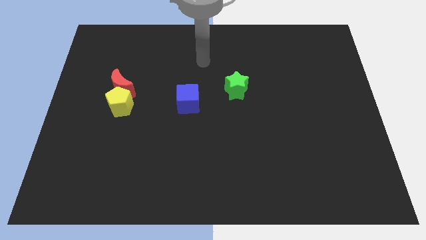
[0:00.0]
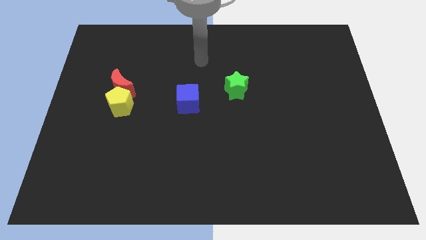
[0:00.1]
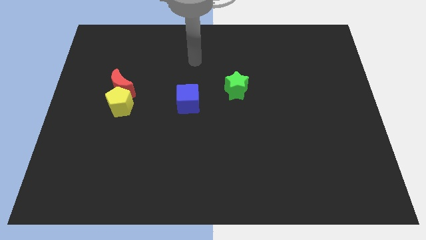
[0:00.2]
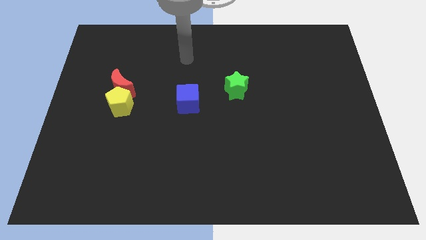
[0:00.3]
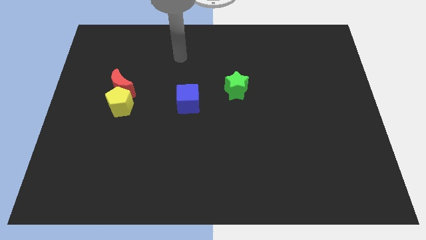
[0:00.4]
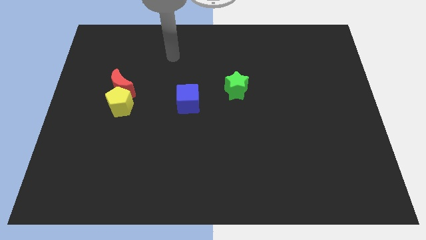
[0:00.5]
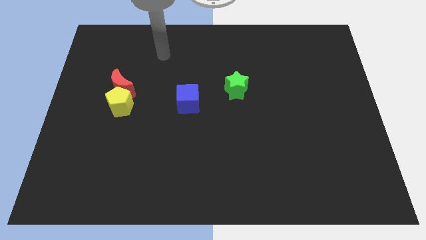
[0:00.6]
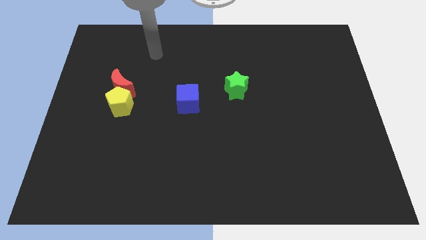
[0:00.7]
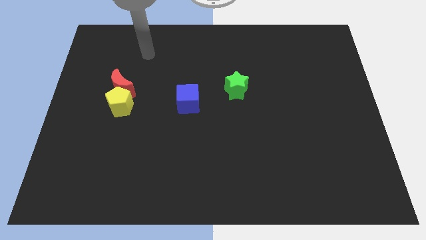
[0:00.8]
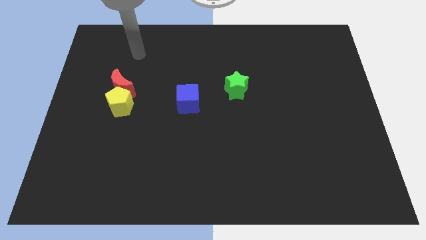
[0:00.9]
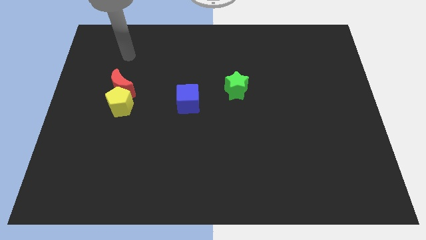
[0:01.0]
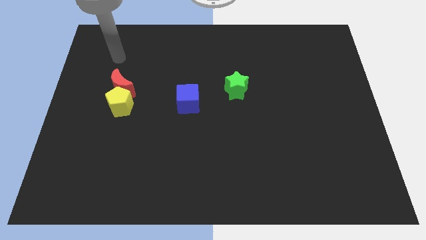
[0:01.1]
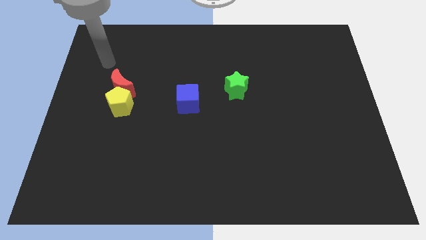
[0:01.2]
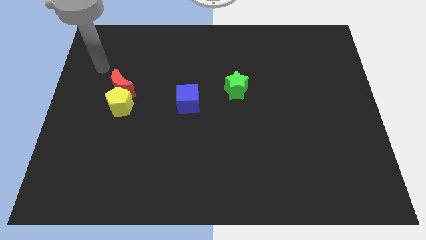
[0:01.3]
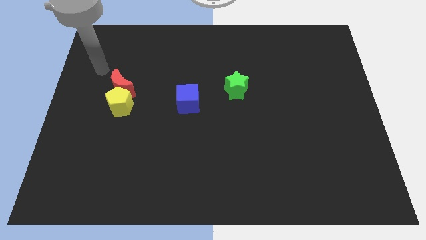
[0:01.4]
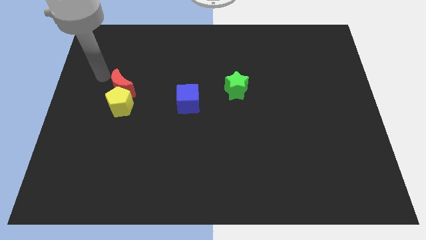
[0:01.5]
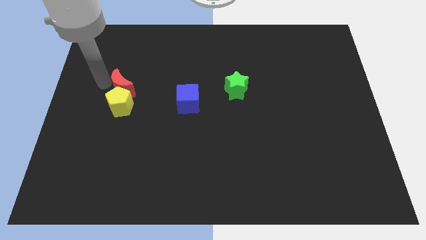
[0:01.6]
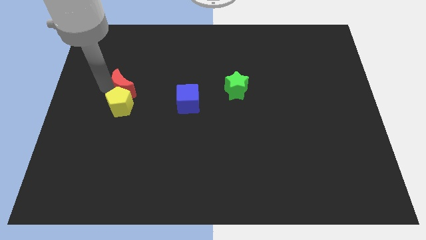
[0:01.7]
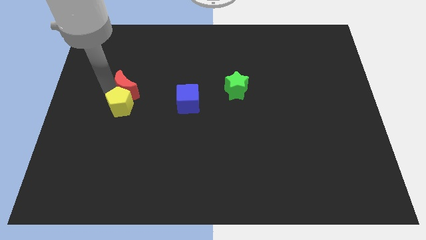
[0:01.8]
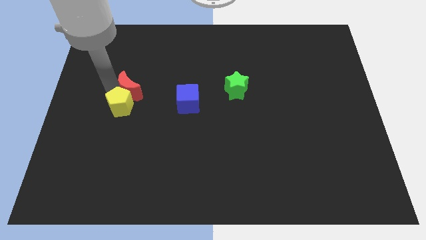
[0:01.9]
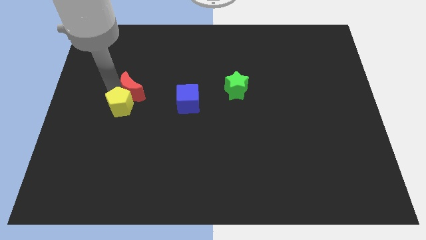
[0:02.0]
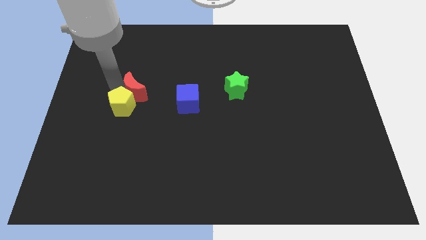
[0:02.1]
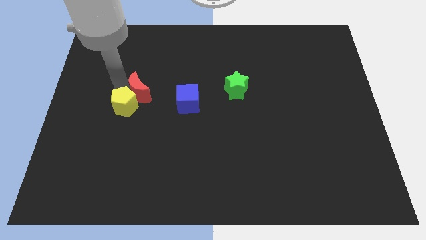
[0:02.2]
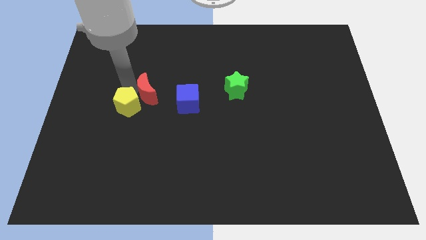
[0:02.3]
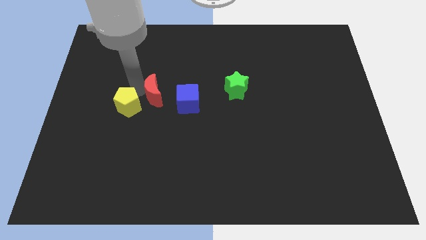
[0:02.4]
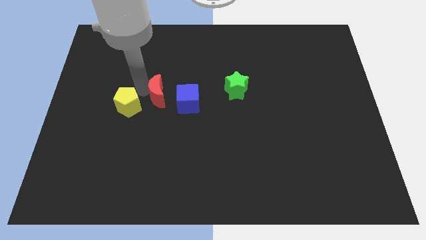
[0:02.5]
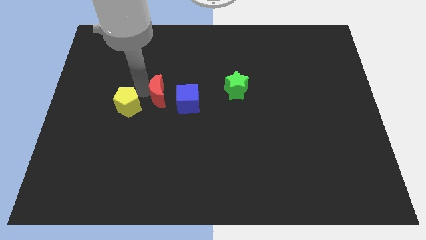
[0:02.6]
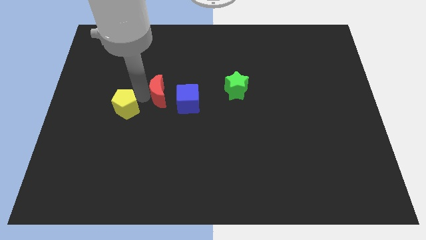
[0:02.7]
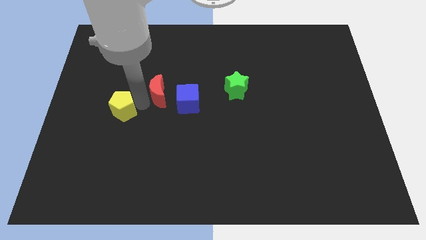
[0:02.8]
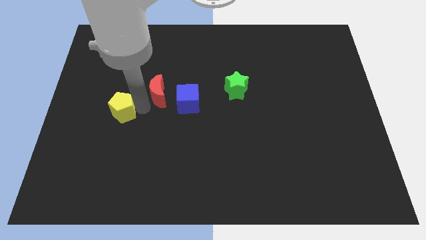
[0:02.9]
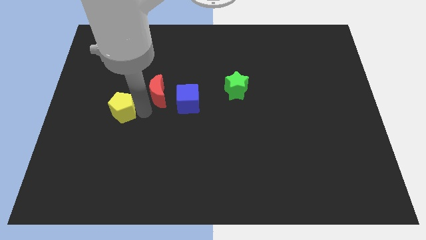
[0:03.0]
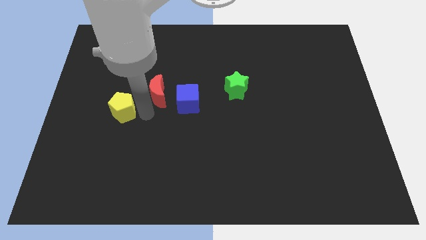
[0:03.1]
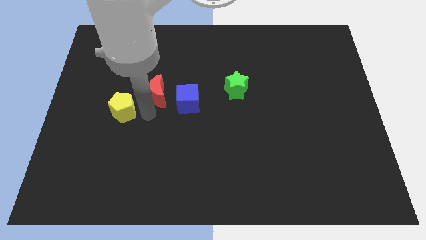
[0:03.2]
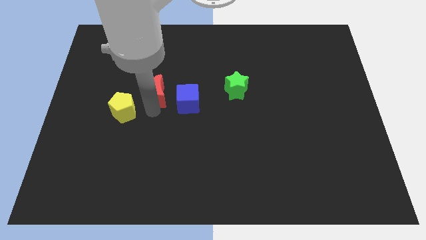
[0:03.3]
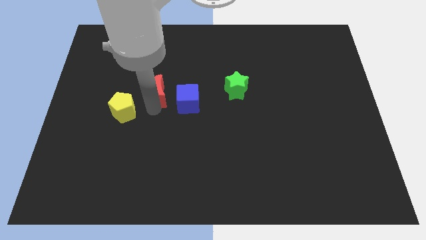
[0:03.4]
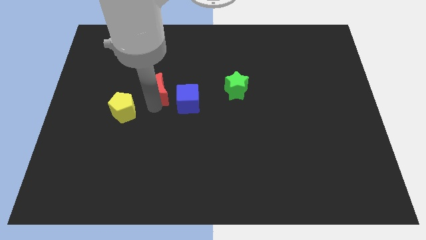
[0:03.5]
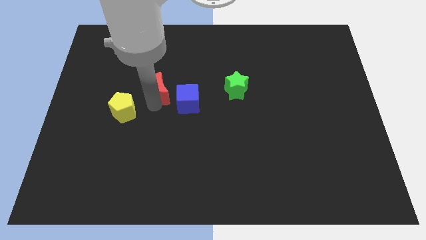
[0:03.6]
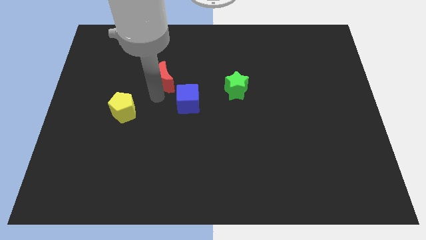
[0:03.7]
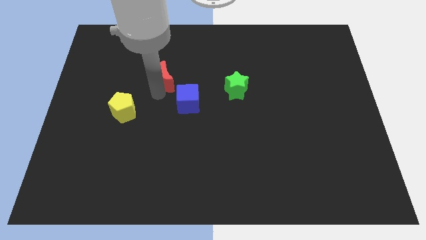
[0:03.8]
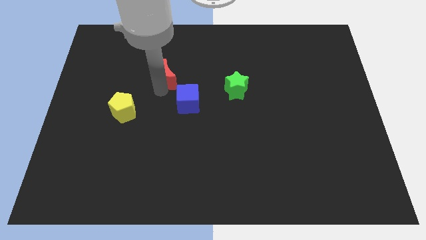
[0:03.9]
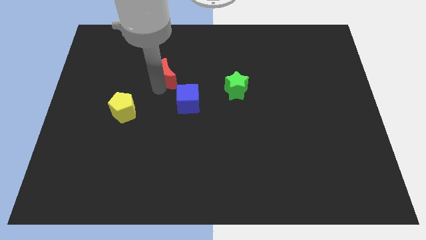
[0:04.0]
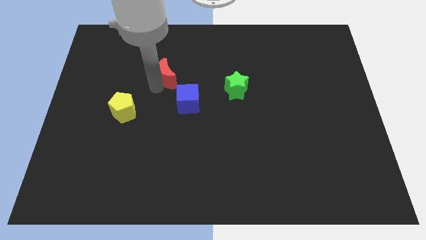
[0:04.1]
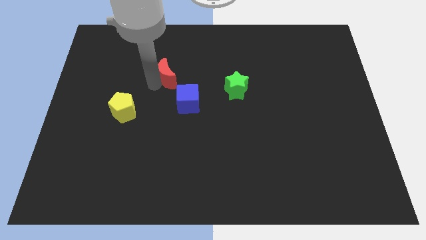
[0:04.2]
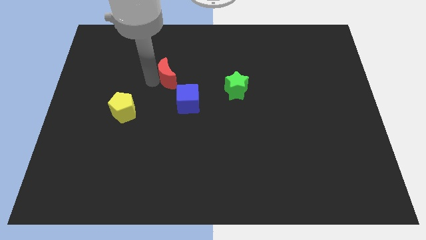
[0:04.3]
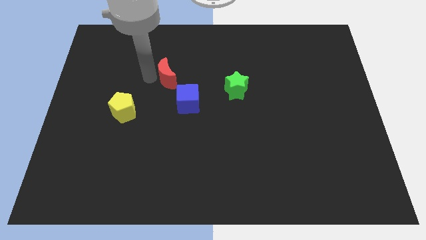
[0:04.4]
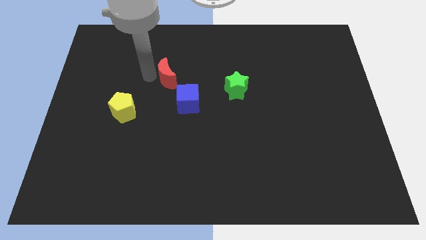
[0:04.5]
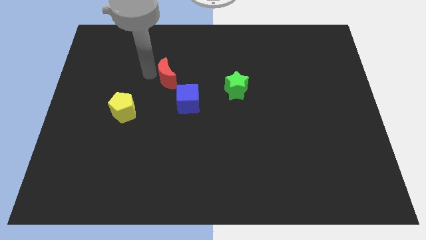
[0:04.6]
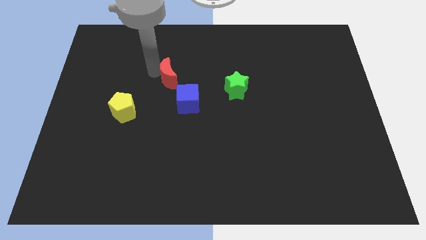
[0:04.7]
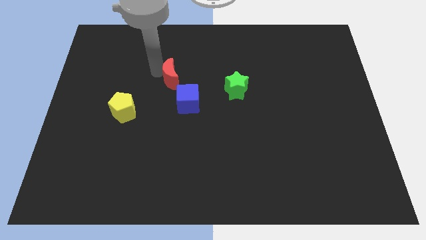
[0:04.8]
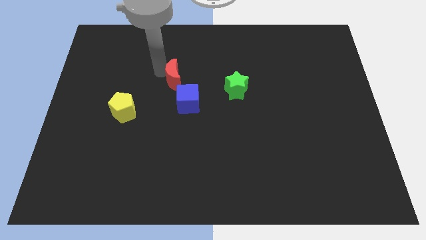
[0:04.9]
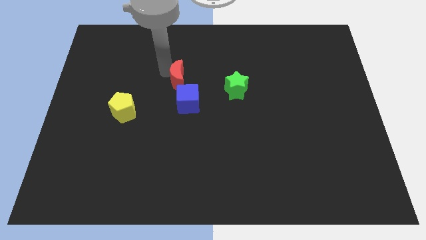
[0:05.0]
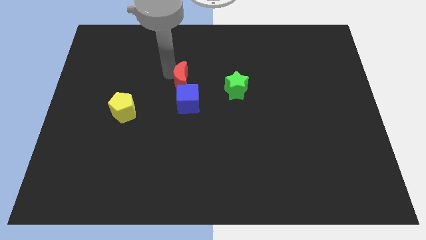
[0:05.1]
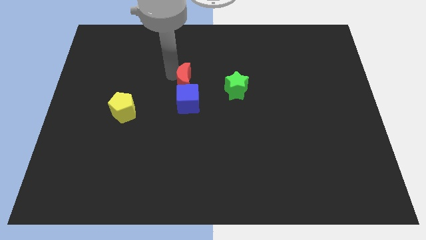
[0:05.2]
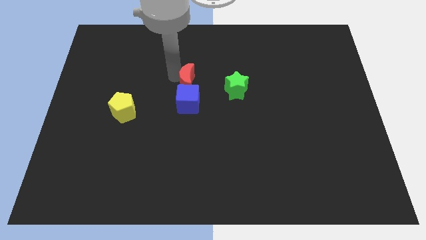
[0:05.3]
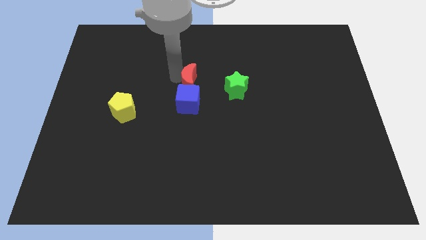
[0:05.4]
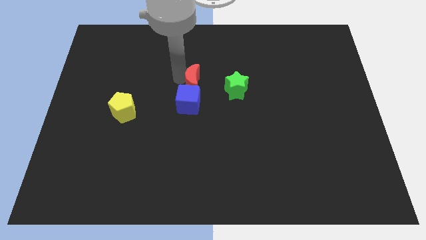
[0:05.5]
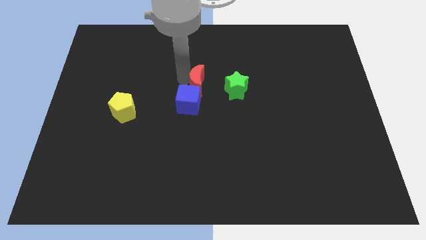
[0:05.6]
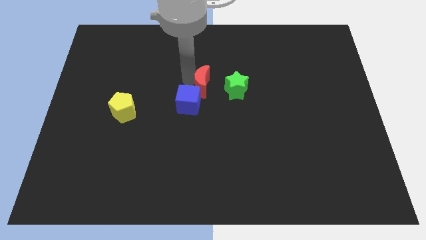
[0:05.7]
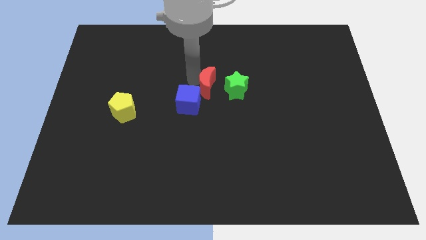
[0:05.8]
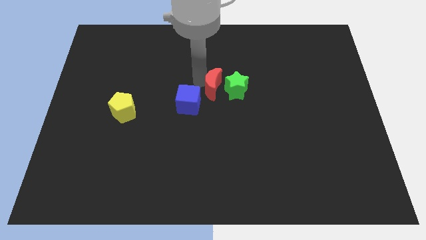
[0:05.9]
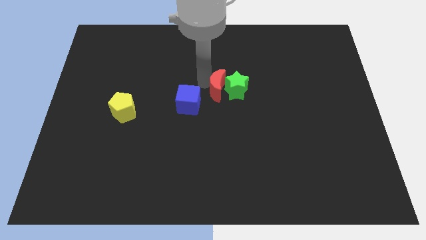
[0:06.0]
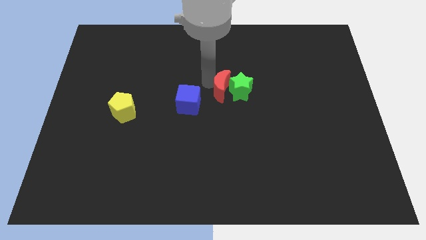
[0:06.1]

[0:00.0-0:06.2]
slide the red block to the green star

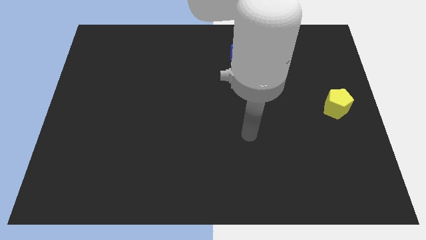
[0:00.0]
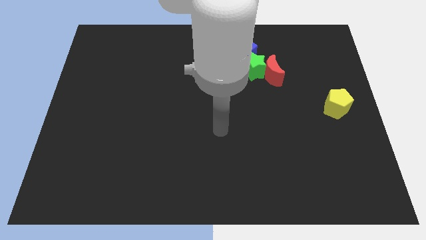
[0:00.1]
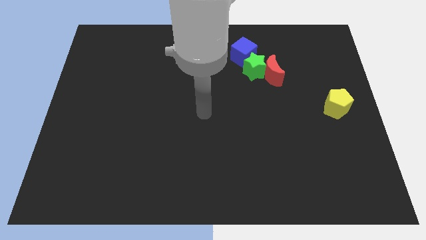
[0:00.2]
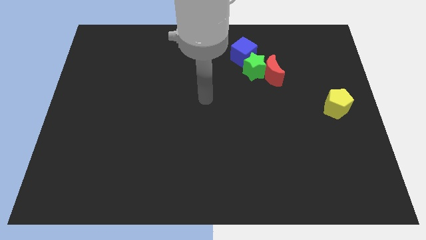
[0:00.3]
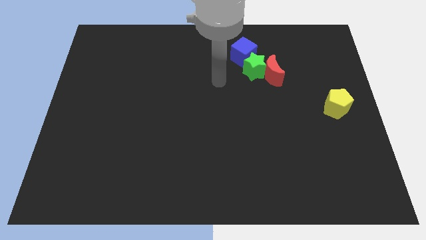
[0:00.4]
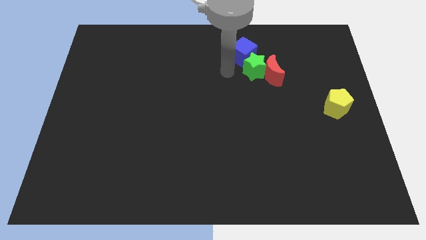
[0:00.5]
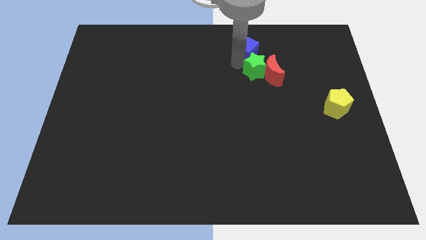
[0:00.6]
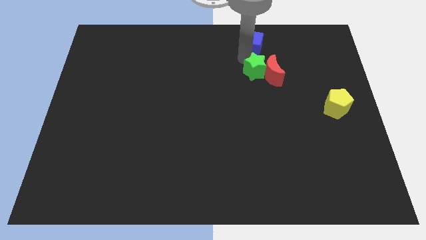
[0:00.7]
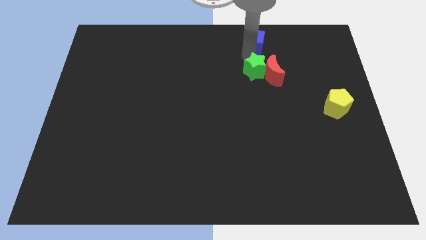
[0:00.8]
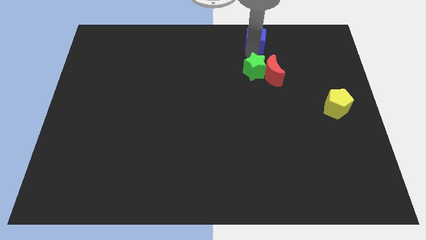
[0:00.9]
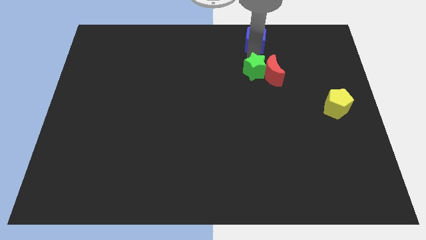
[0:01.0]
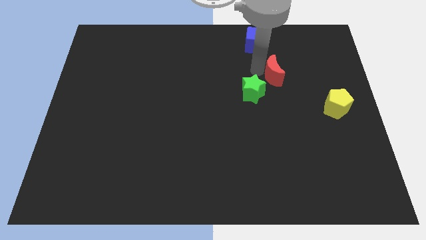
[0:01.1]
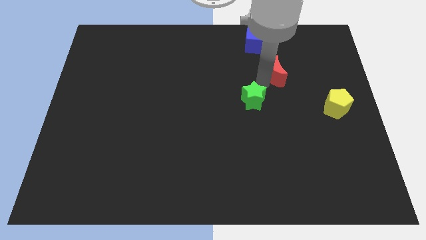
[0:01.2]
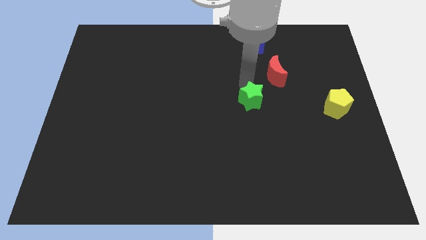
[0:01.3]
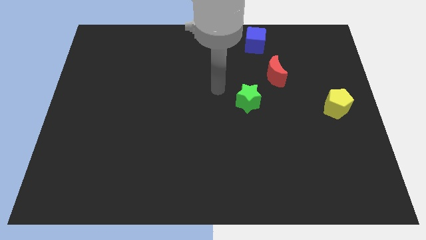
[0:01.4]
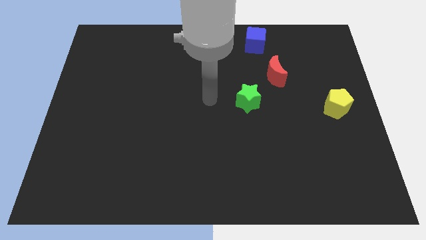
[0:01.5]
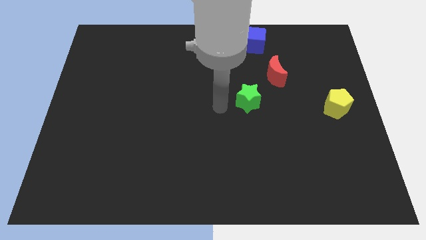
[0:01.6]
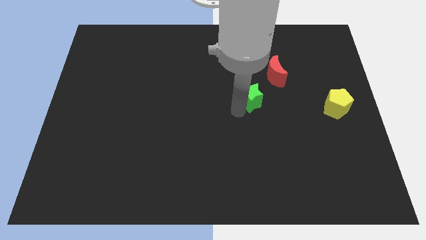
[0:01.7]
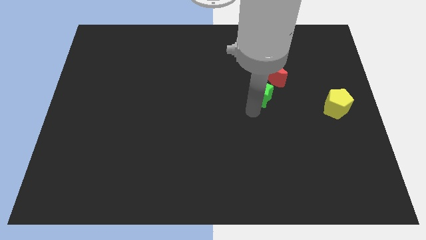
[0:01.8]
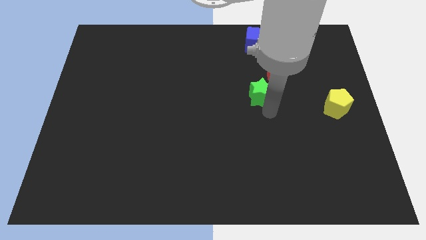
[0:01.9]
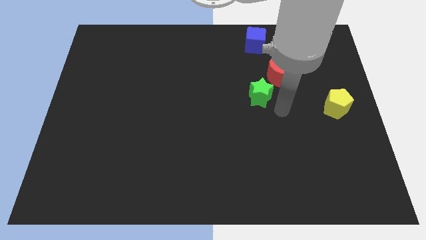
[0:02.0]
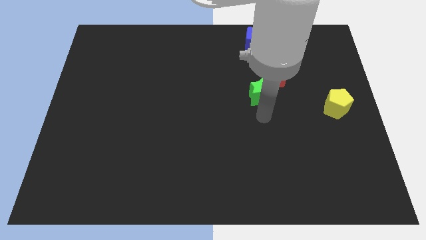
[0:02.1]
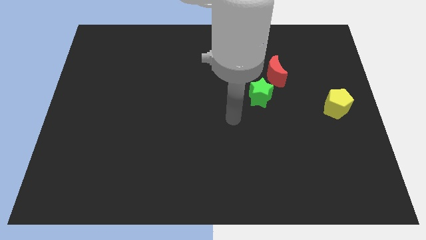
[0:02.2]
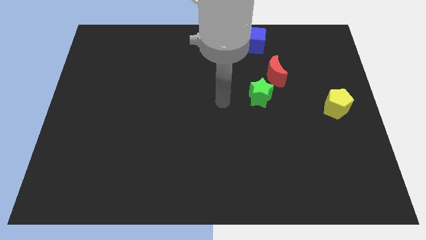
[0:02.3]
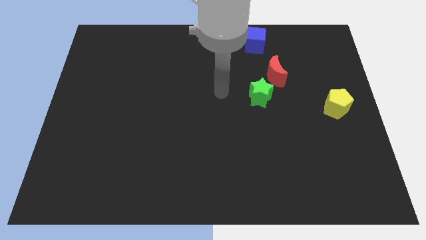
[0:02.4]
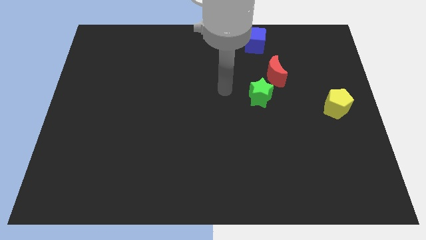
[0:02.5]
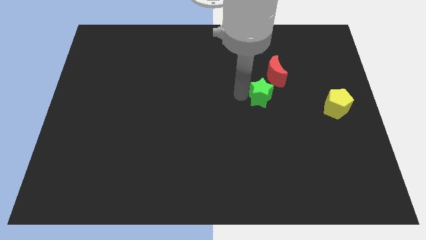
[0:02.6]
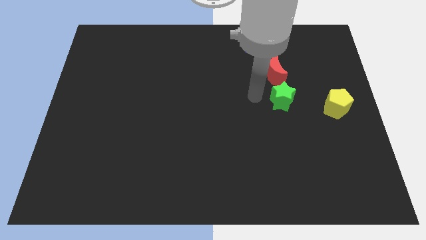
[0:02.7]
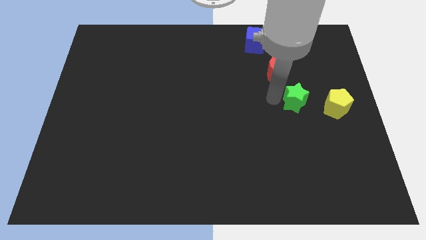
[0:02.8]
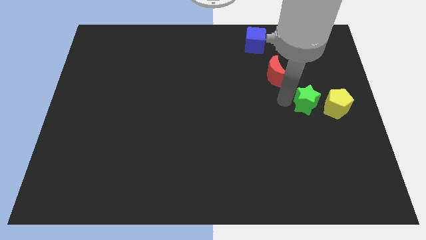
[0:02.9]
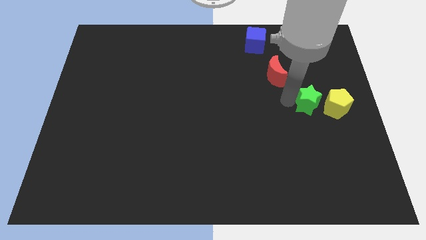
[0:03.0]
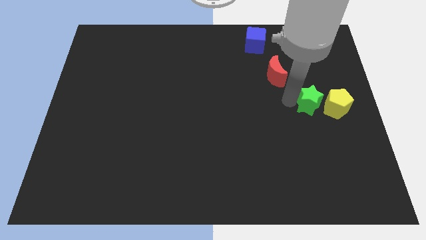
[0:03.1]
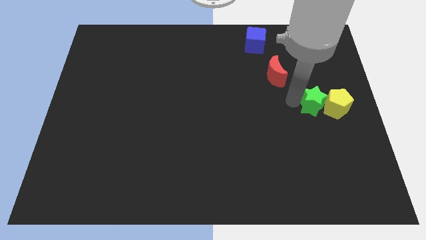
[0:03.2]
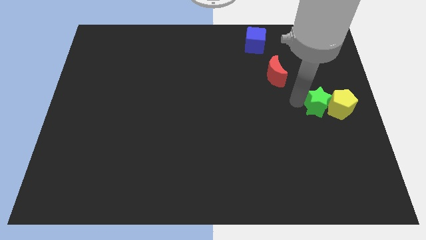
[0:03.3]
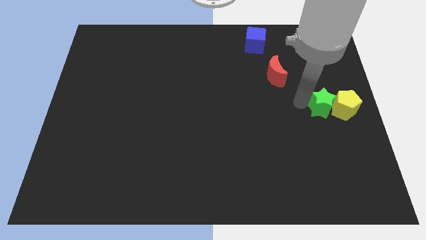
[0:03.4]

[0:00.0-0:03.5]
put the green star to the yellow block
